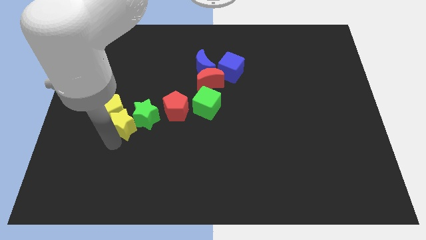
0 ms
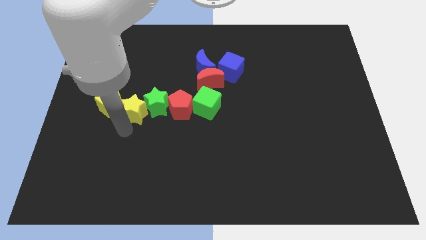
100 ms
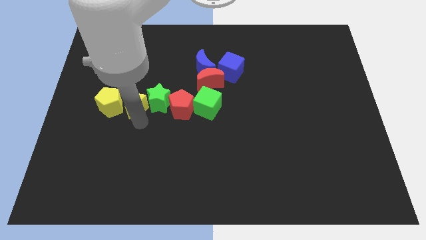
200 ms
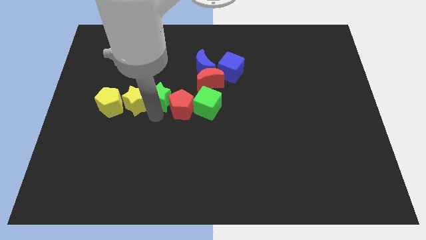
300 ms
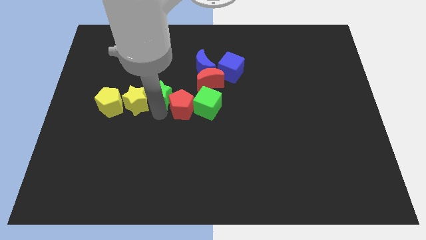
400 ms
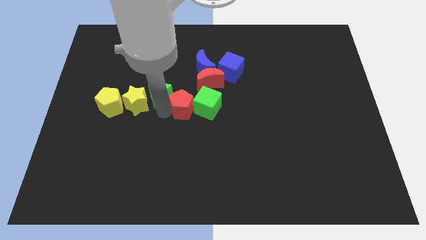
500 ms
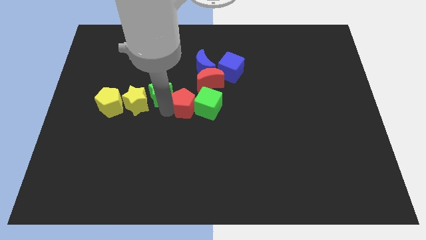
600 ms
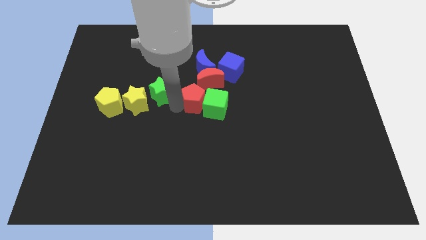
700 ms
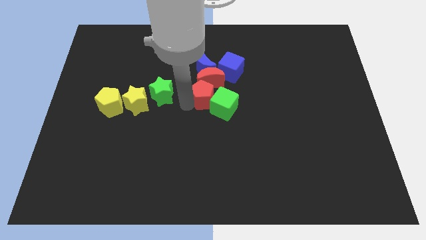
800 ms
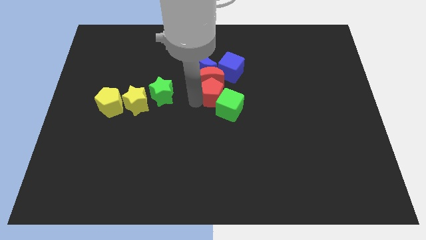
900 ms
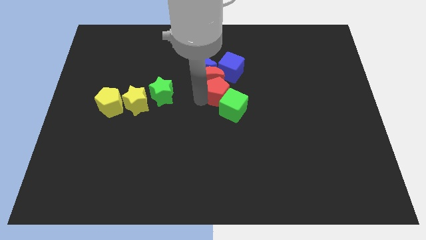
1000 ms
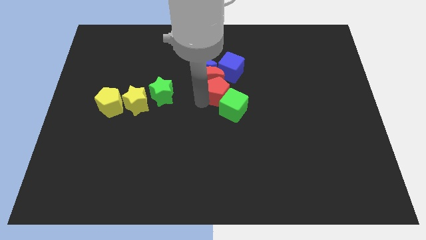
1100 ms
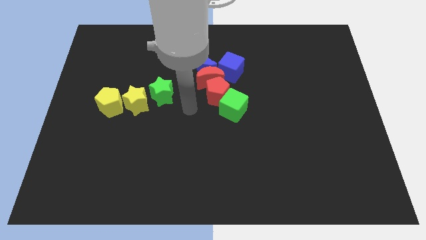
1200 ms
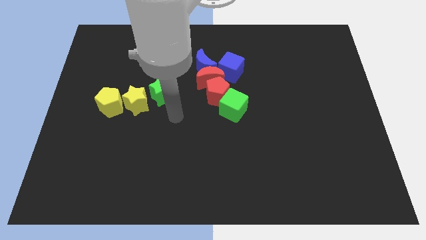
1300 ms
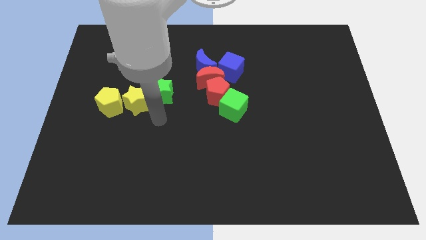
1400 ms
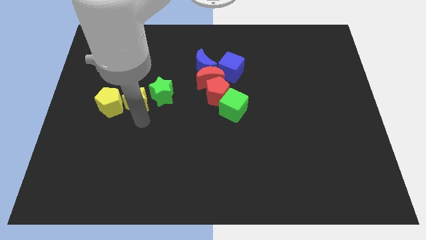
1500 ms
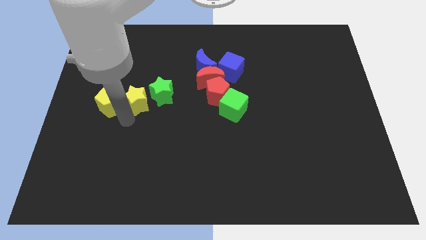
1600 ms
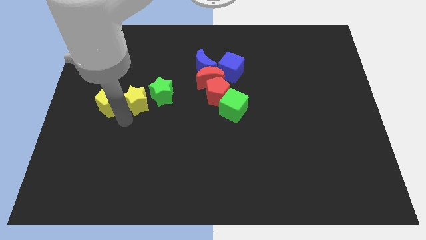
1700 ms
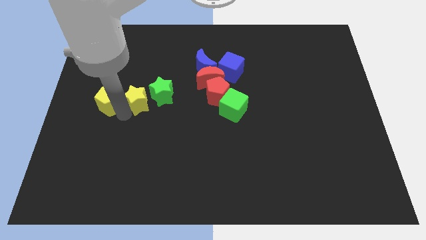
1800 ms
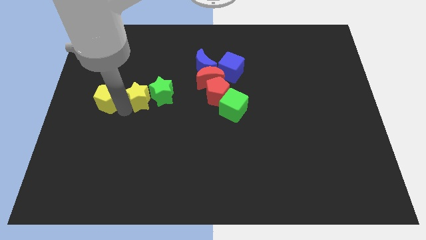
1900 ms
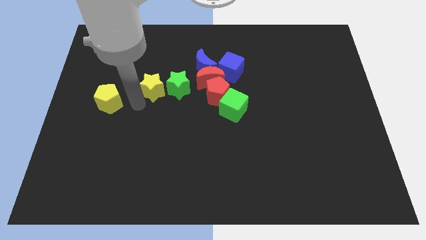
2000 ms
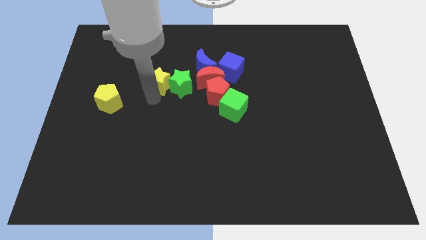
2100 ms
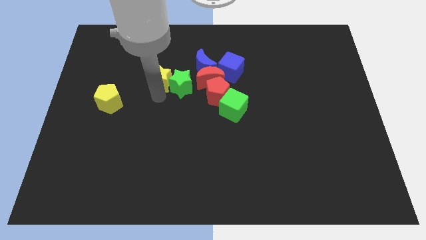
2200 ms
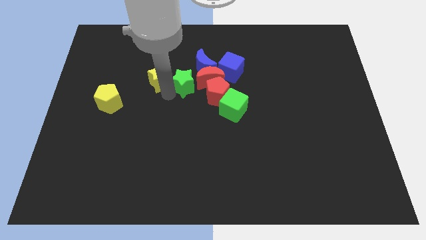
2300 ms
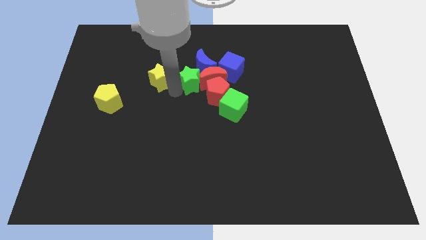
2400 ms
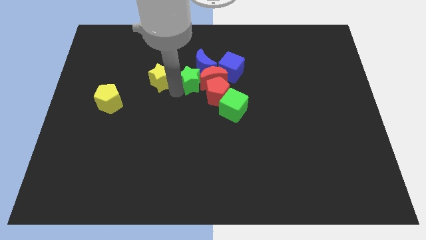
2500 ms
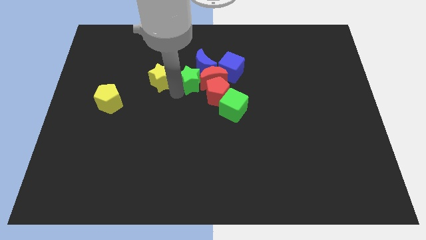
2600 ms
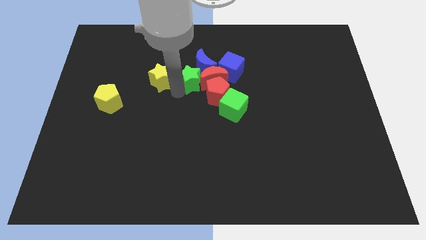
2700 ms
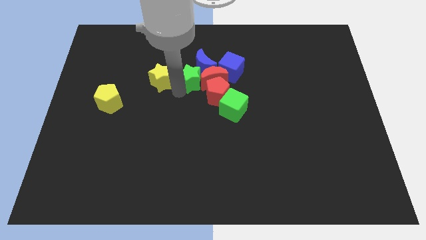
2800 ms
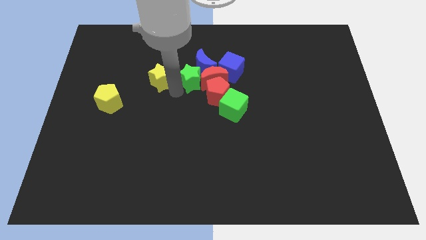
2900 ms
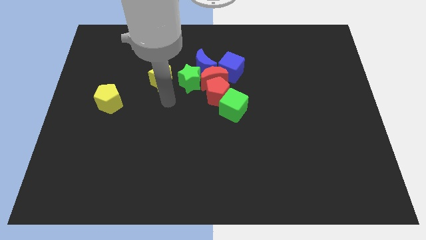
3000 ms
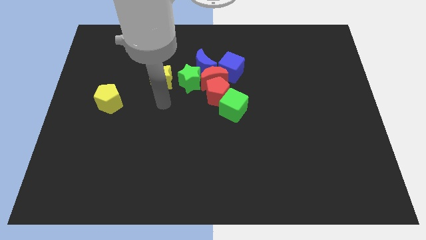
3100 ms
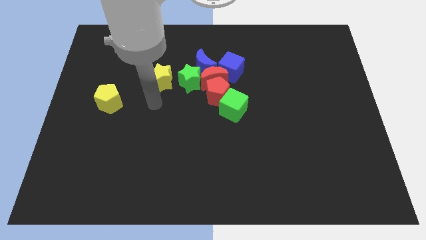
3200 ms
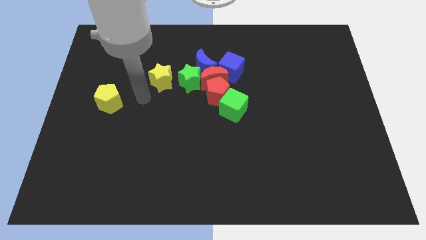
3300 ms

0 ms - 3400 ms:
place the yellow star in between the yellow pentagon and the green star

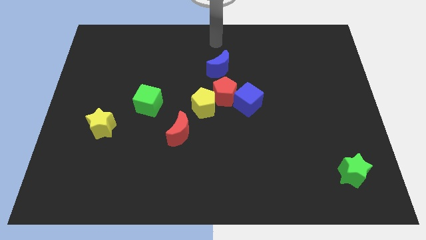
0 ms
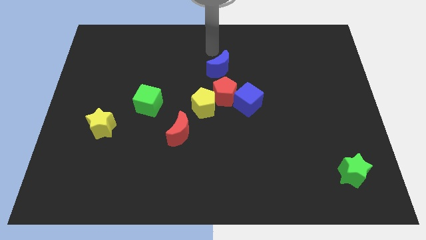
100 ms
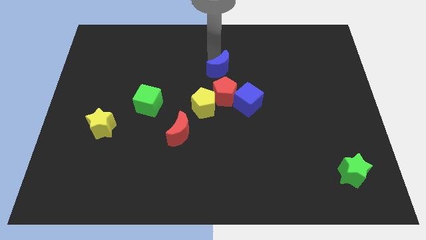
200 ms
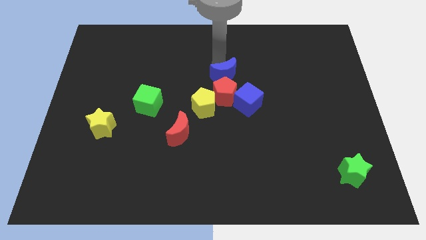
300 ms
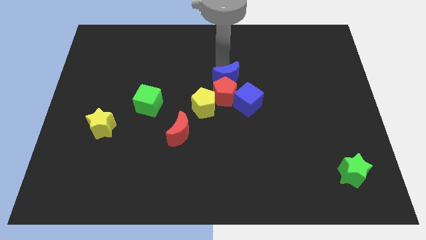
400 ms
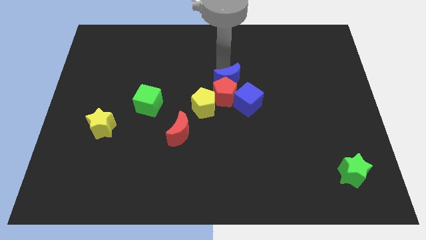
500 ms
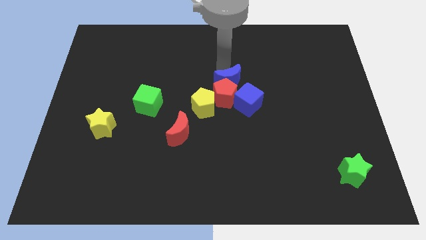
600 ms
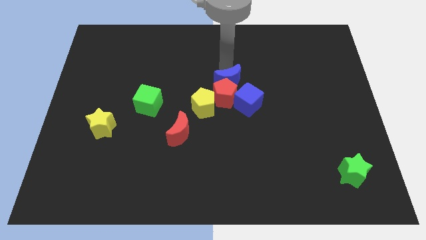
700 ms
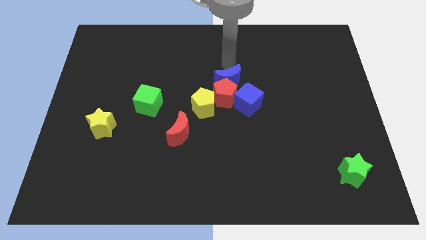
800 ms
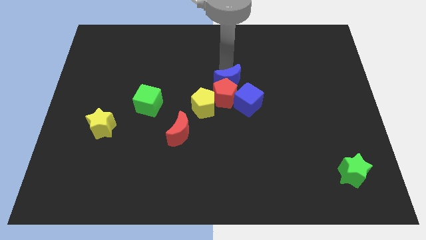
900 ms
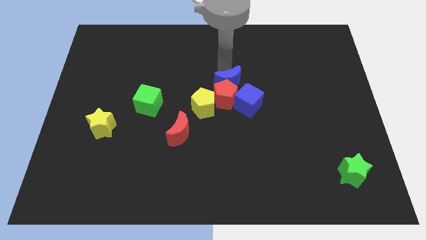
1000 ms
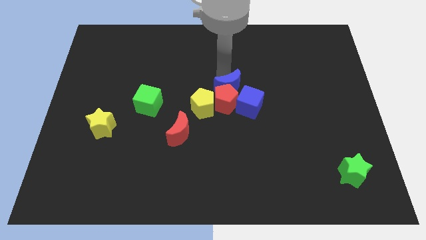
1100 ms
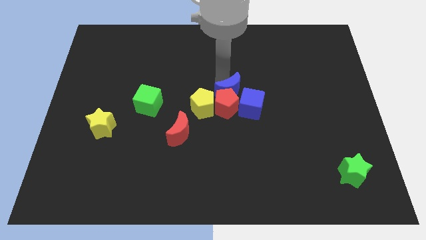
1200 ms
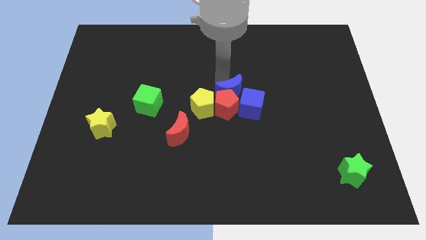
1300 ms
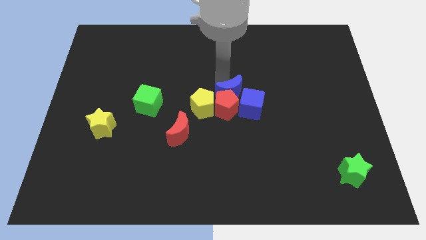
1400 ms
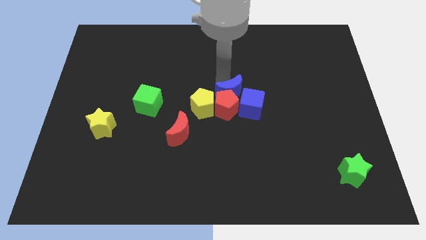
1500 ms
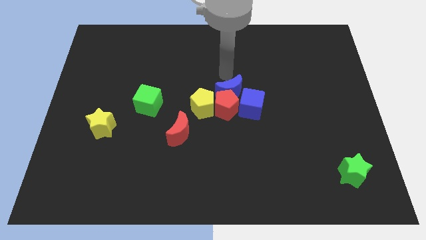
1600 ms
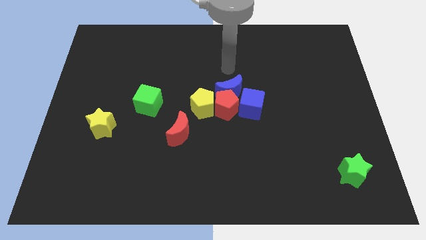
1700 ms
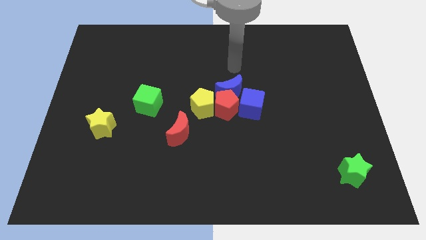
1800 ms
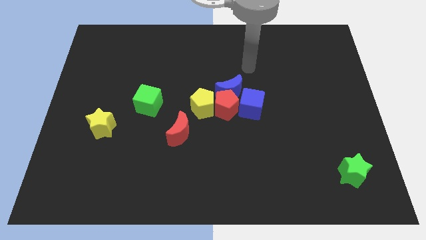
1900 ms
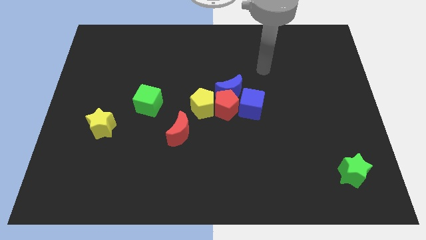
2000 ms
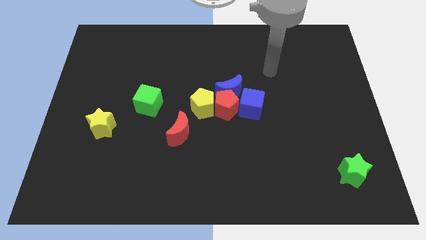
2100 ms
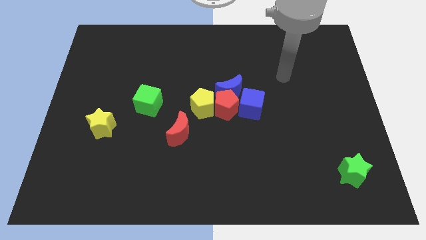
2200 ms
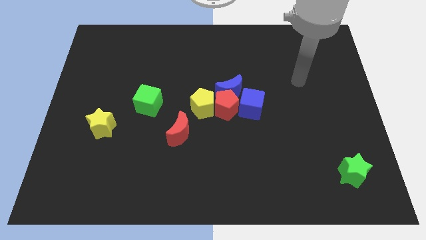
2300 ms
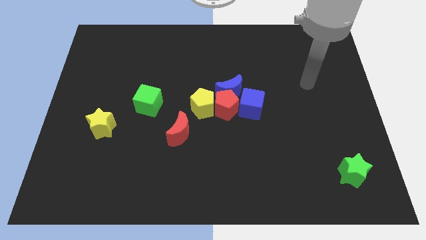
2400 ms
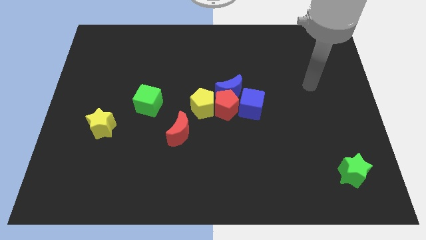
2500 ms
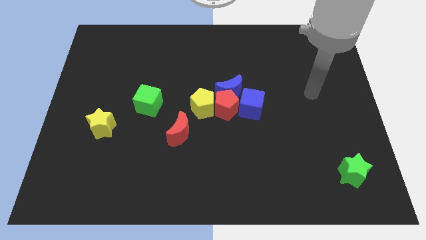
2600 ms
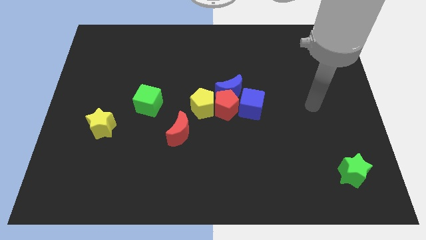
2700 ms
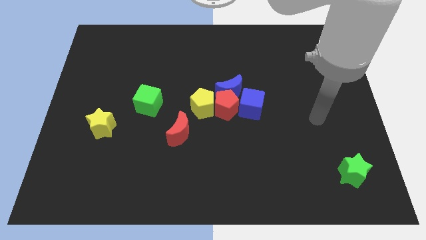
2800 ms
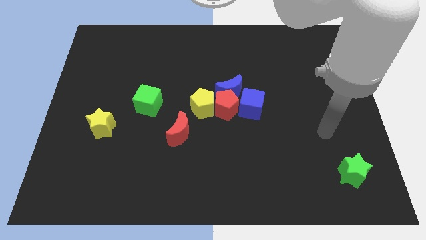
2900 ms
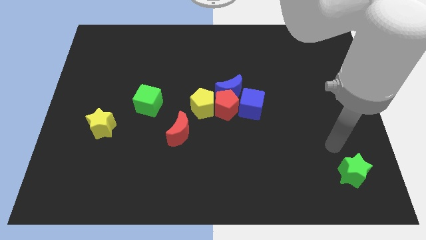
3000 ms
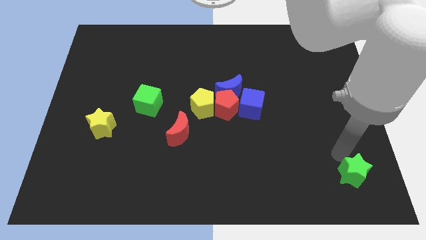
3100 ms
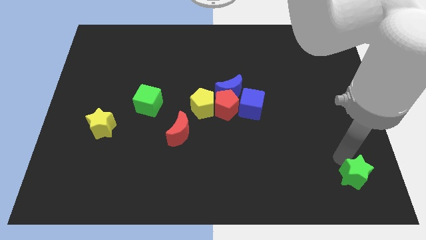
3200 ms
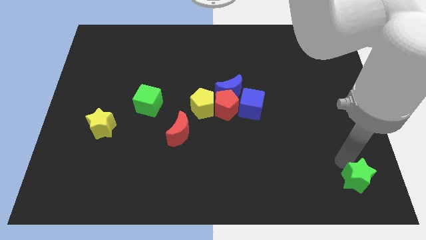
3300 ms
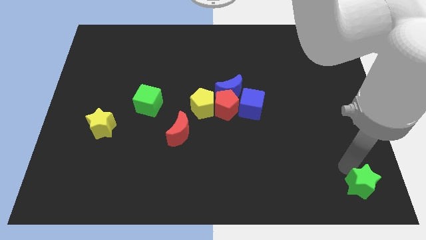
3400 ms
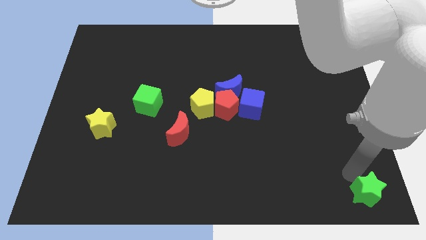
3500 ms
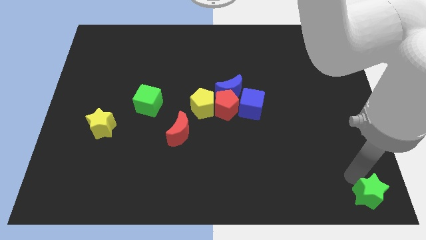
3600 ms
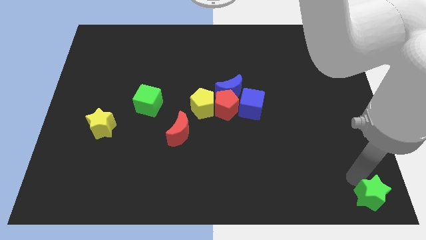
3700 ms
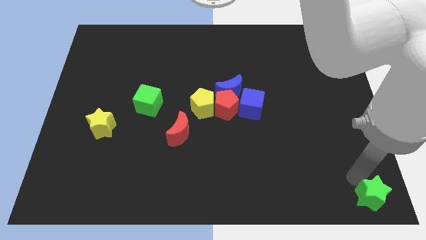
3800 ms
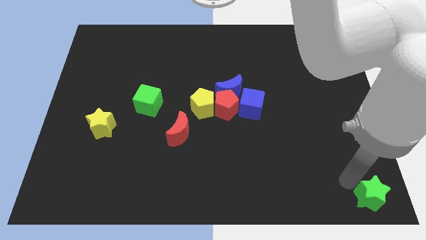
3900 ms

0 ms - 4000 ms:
slide the green star to the bottom right of the board

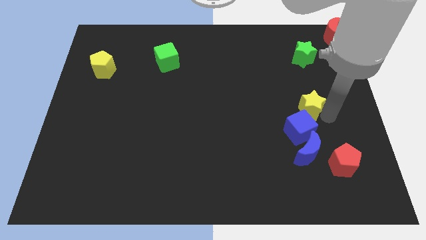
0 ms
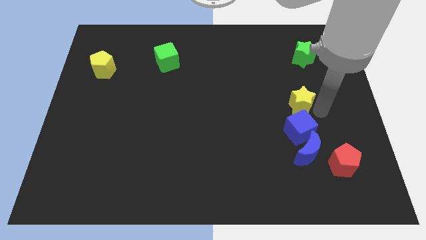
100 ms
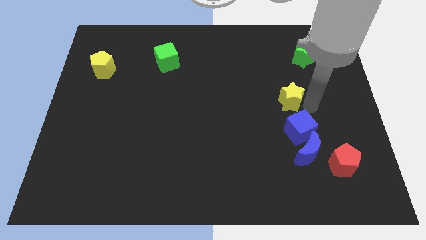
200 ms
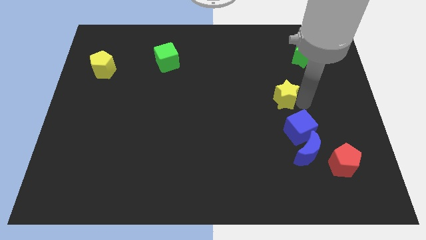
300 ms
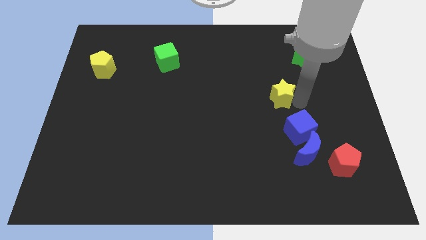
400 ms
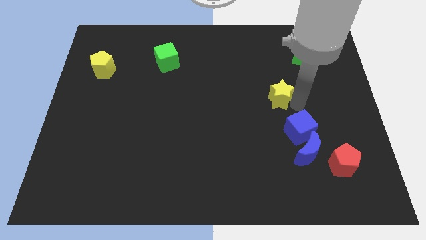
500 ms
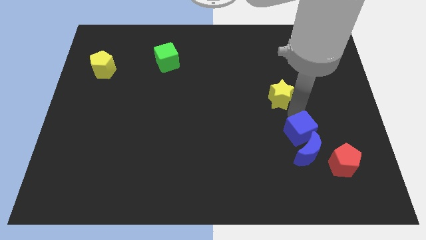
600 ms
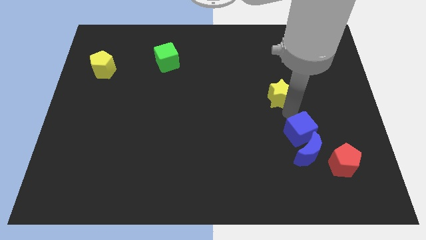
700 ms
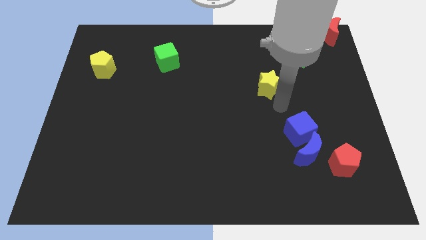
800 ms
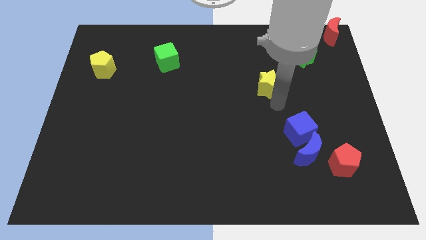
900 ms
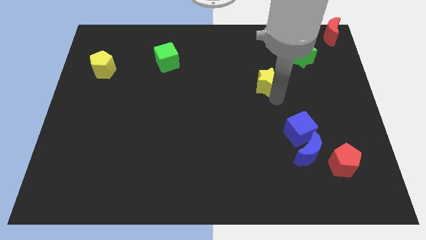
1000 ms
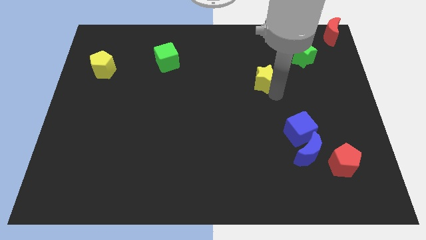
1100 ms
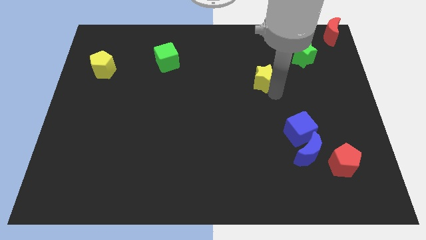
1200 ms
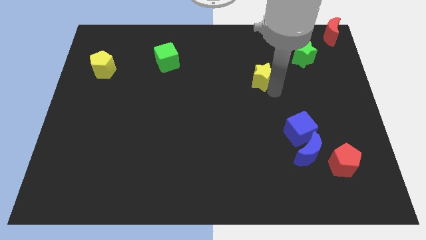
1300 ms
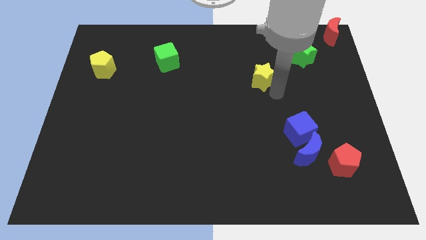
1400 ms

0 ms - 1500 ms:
move the yellow star up slightly

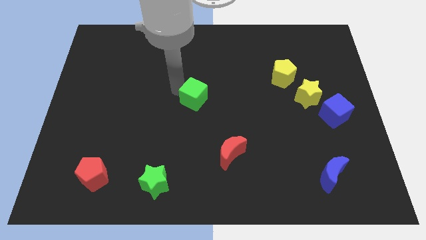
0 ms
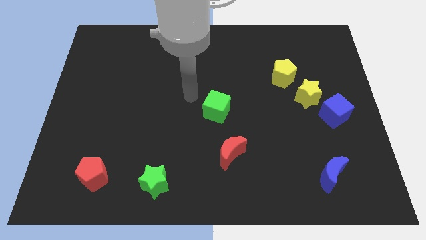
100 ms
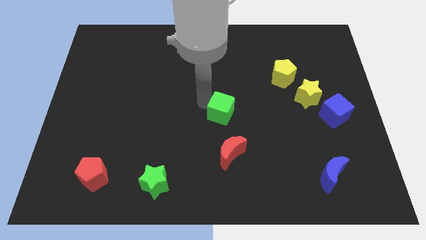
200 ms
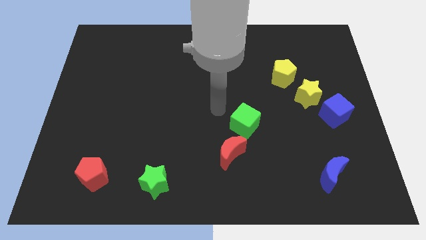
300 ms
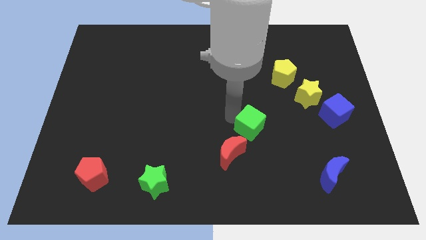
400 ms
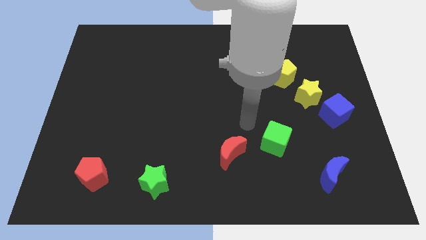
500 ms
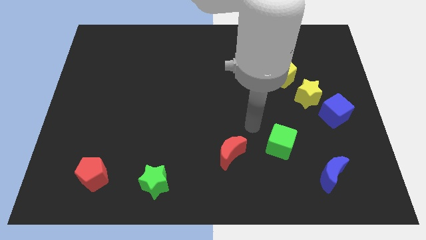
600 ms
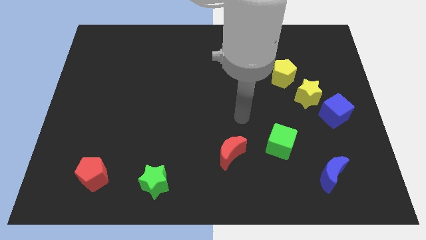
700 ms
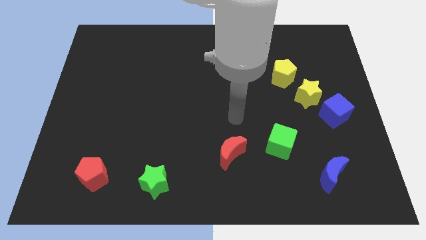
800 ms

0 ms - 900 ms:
push the green cube towards the blue moon
